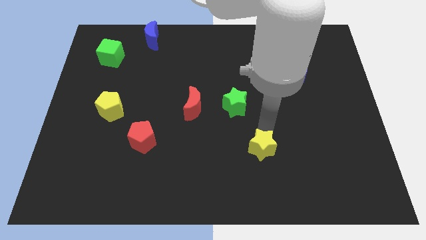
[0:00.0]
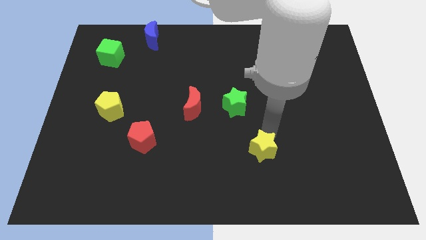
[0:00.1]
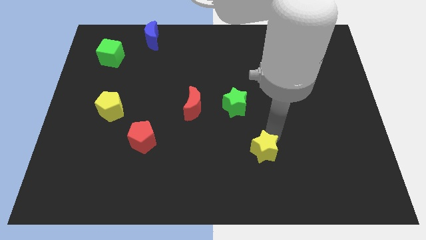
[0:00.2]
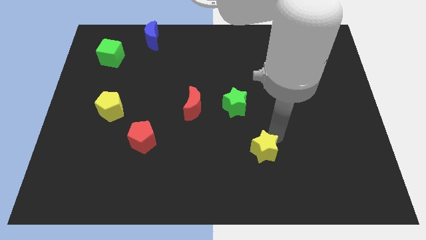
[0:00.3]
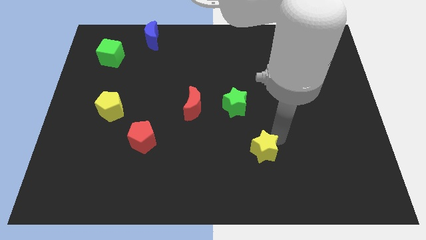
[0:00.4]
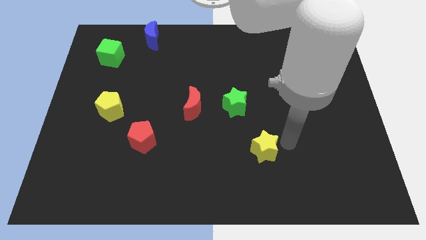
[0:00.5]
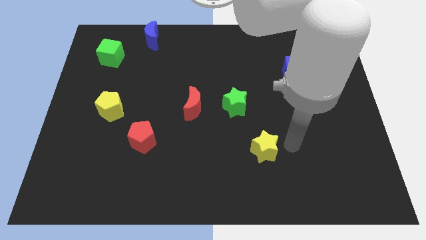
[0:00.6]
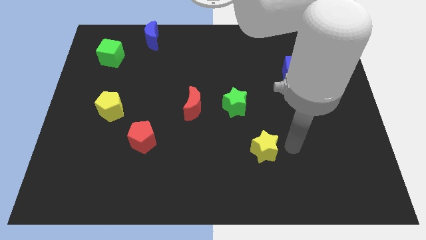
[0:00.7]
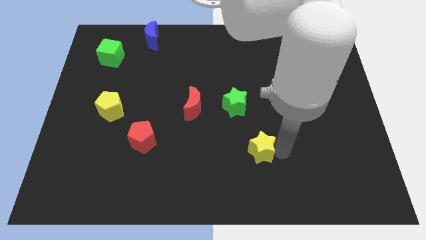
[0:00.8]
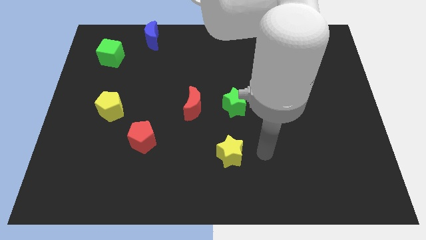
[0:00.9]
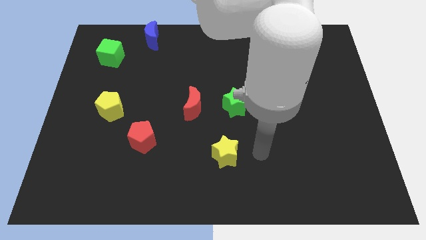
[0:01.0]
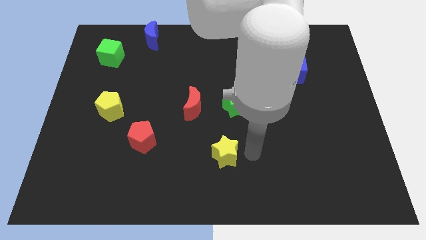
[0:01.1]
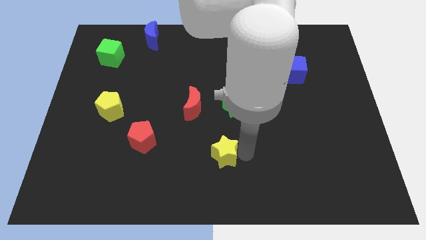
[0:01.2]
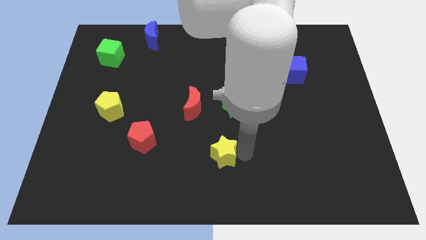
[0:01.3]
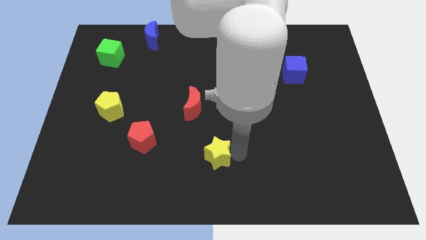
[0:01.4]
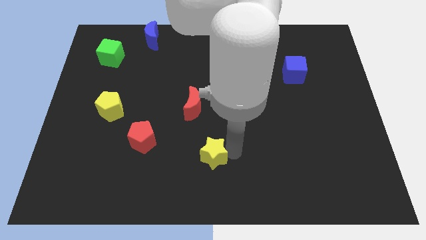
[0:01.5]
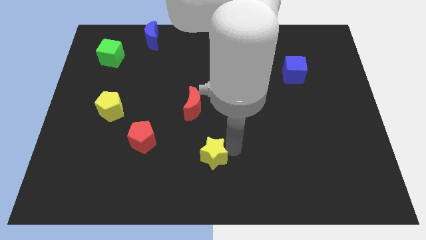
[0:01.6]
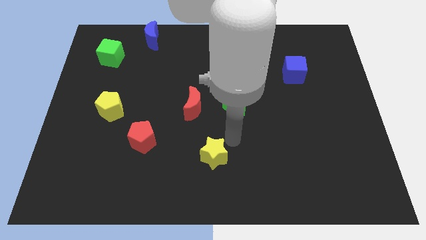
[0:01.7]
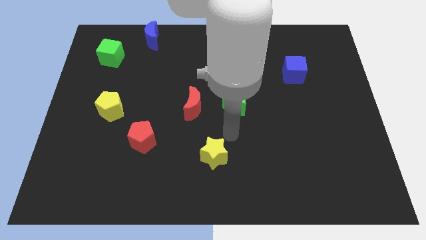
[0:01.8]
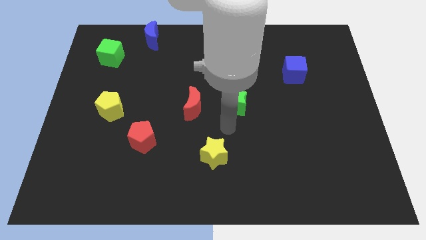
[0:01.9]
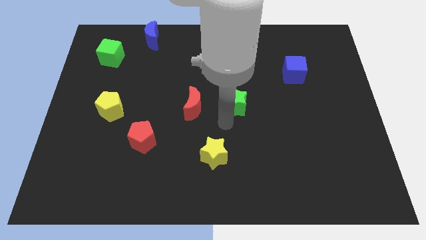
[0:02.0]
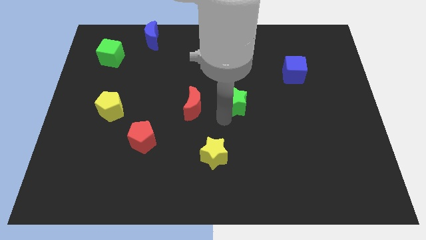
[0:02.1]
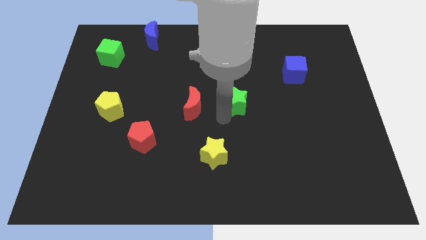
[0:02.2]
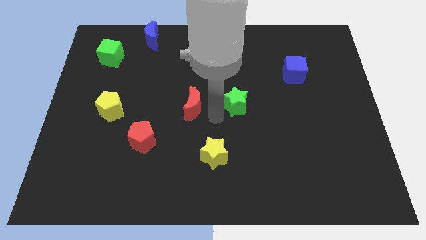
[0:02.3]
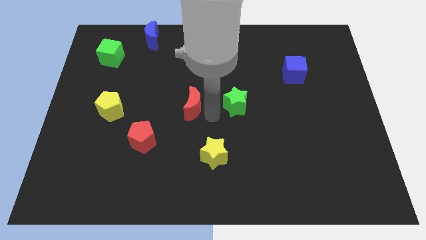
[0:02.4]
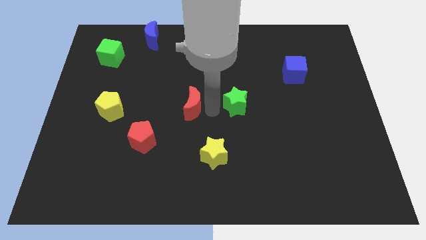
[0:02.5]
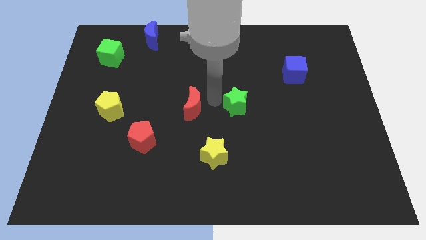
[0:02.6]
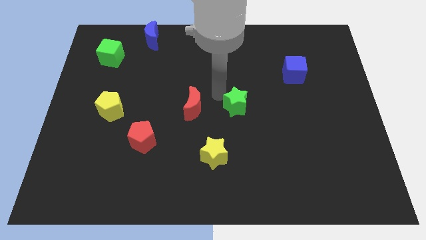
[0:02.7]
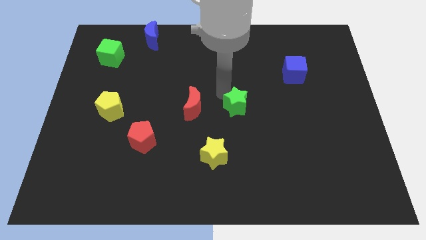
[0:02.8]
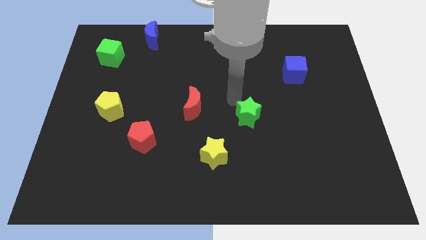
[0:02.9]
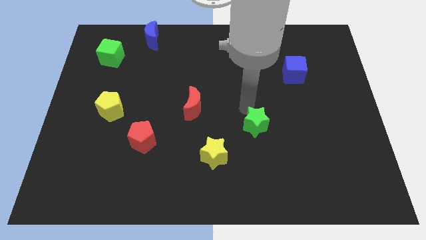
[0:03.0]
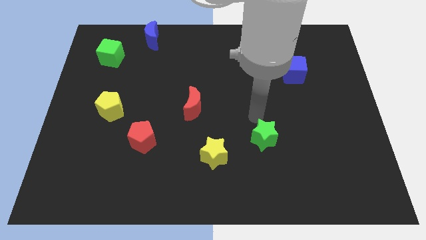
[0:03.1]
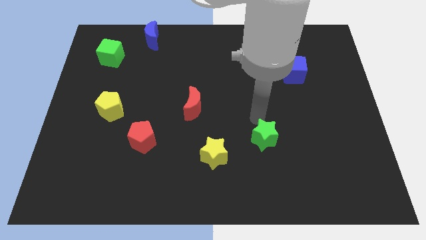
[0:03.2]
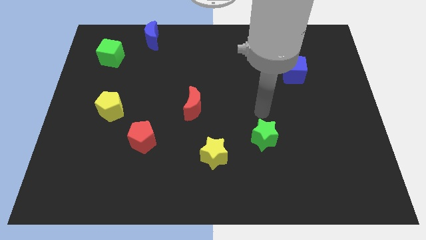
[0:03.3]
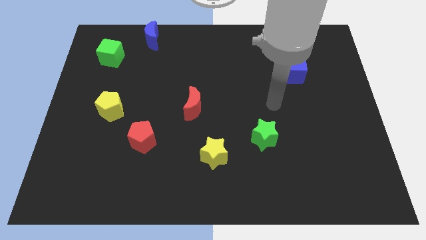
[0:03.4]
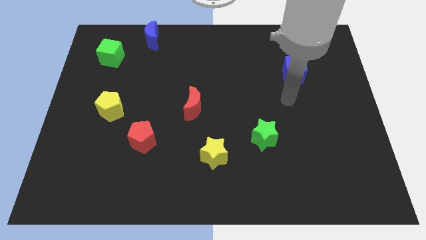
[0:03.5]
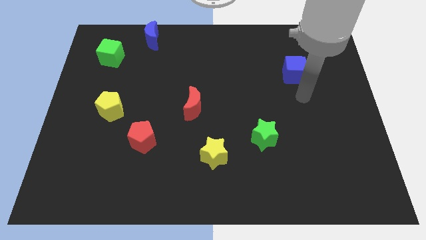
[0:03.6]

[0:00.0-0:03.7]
push the green star near the yellow star

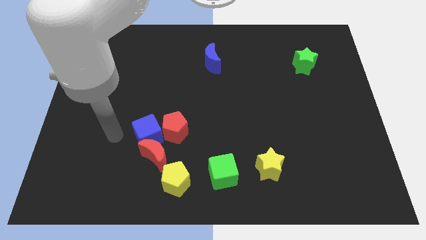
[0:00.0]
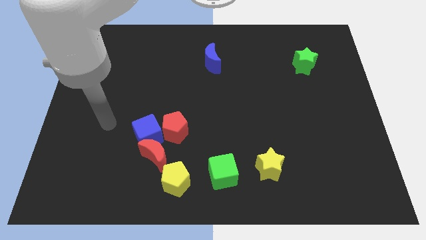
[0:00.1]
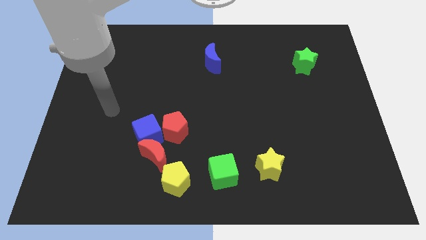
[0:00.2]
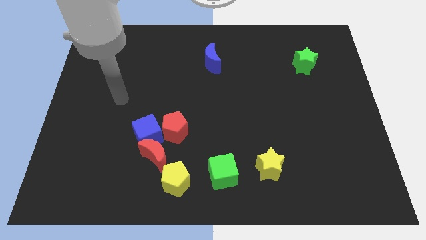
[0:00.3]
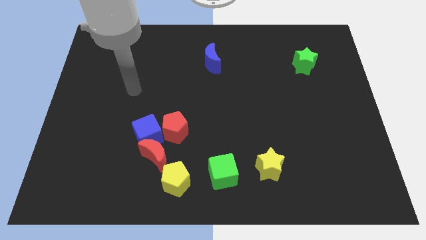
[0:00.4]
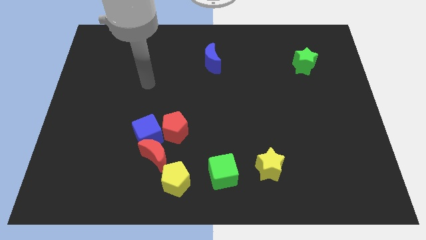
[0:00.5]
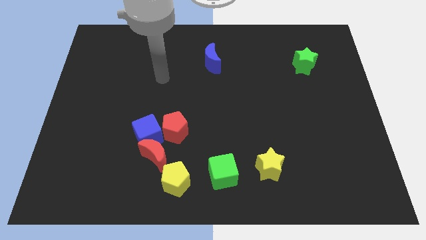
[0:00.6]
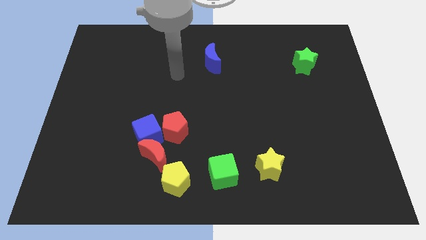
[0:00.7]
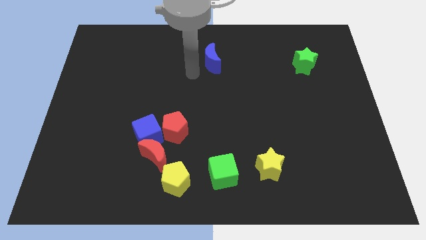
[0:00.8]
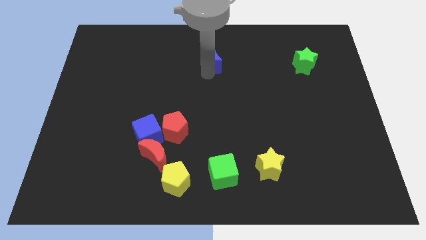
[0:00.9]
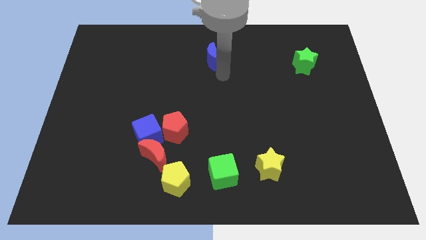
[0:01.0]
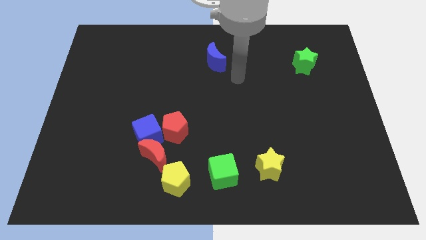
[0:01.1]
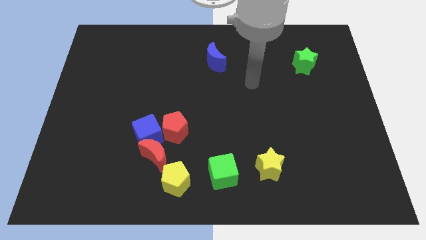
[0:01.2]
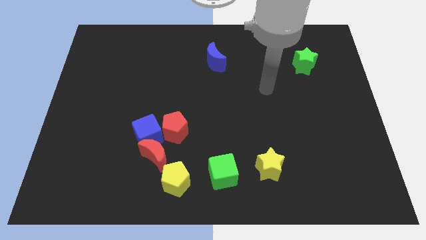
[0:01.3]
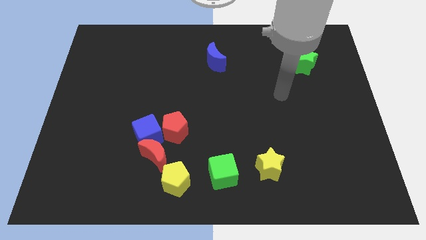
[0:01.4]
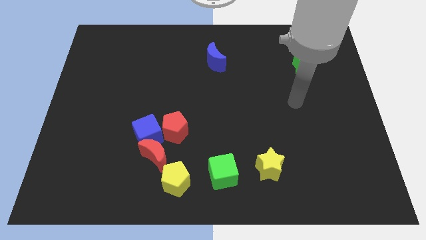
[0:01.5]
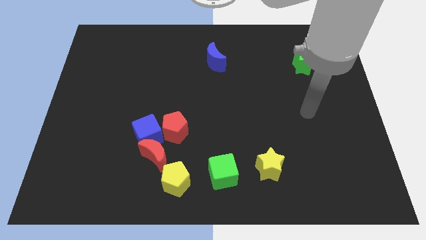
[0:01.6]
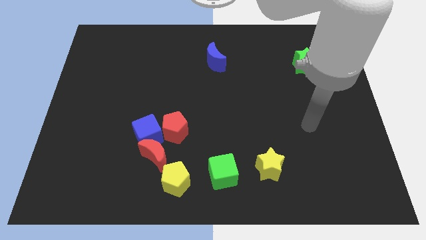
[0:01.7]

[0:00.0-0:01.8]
move your arm away from the blue cube

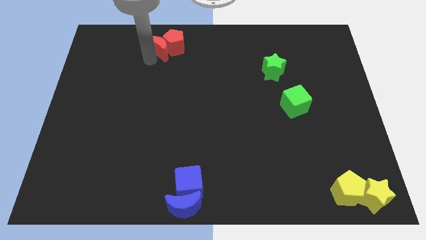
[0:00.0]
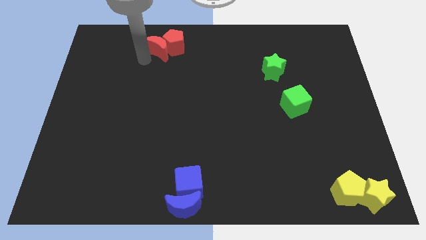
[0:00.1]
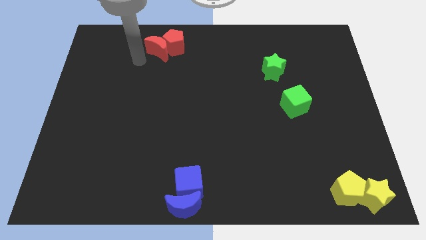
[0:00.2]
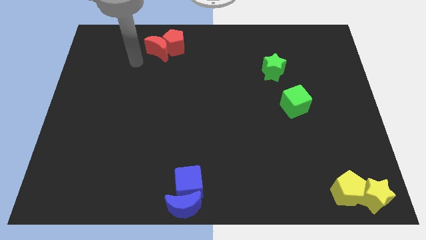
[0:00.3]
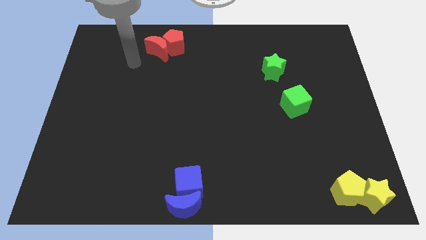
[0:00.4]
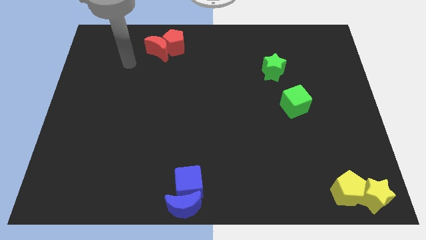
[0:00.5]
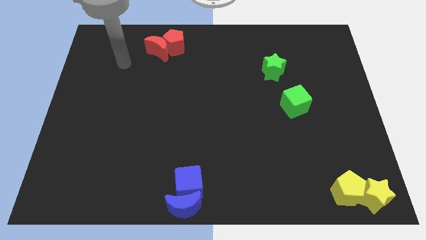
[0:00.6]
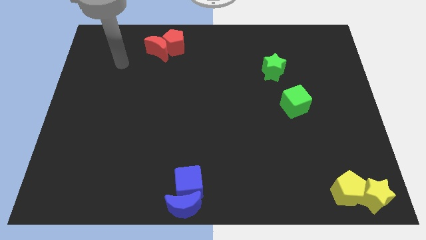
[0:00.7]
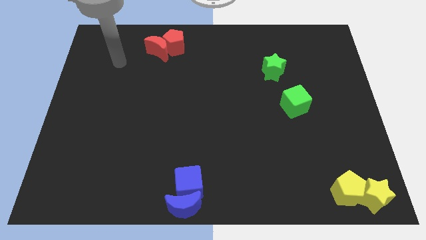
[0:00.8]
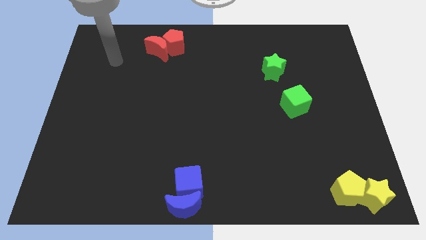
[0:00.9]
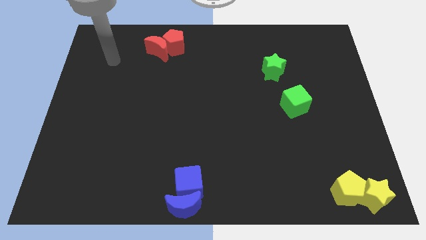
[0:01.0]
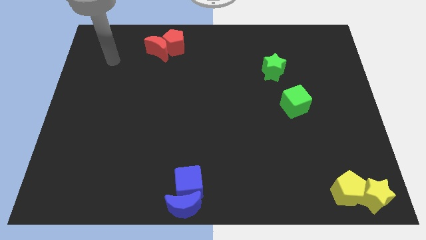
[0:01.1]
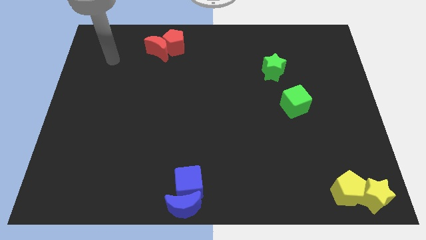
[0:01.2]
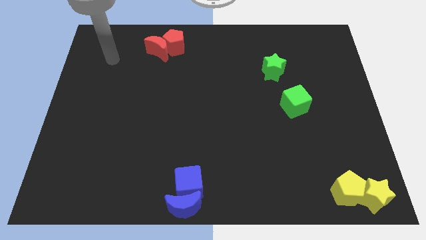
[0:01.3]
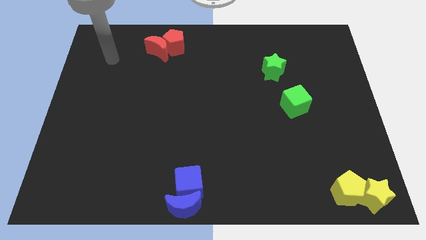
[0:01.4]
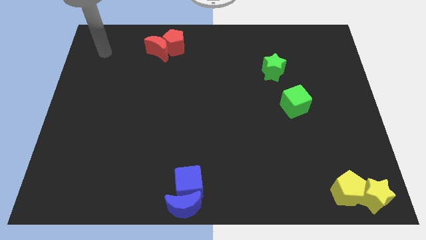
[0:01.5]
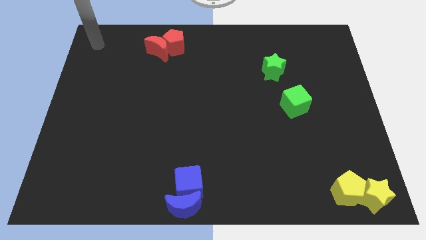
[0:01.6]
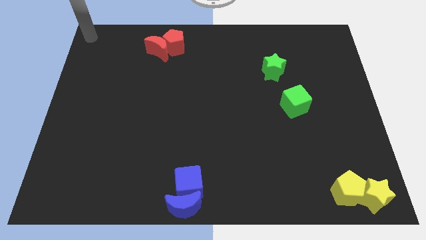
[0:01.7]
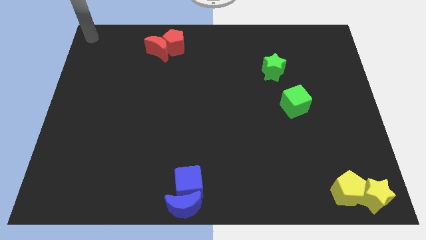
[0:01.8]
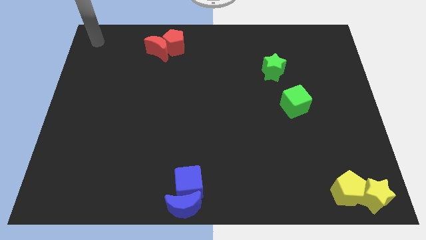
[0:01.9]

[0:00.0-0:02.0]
move your arm away from the red moon

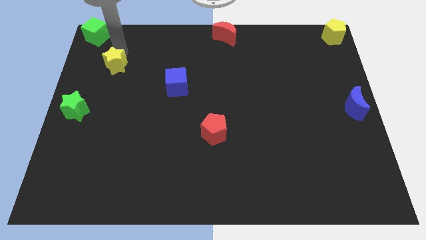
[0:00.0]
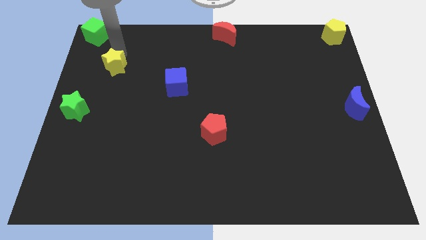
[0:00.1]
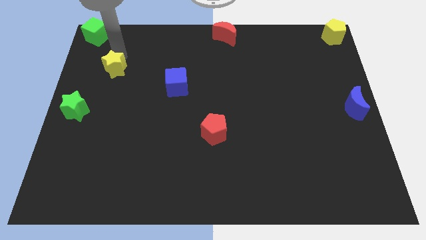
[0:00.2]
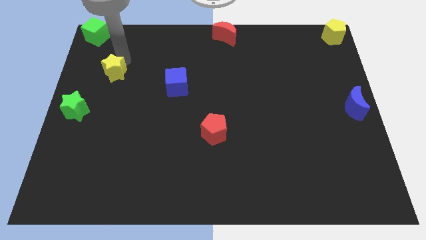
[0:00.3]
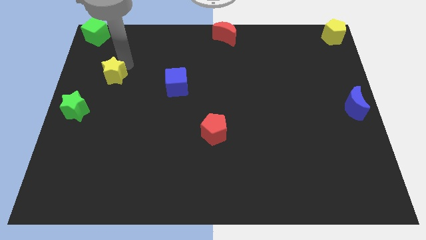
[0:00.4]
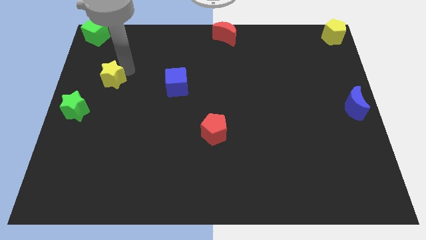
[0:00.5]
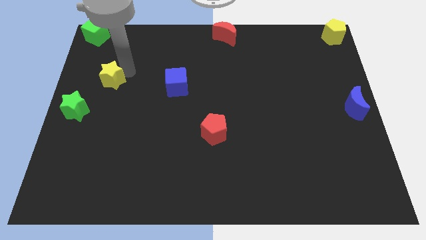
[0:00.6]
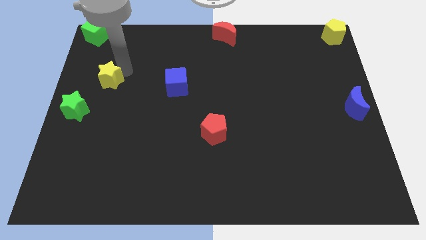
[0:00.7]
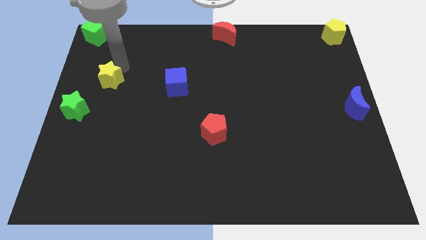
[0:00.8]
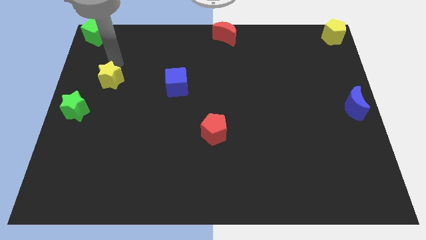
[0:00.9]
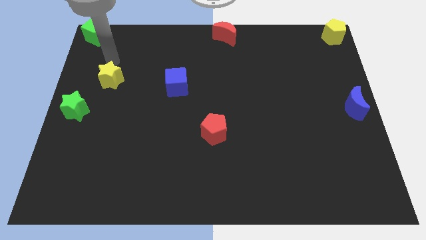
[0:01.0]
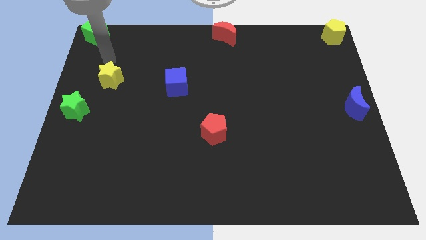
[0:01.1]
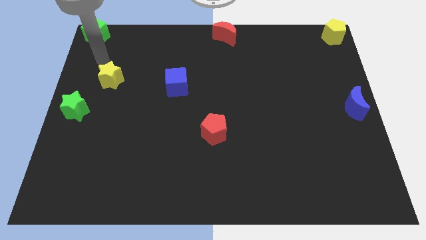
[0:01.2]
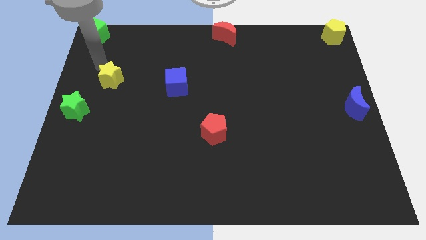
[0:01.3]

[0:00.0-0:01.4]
slightly push the yellow star towards the bottom of the board
